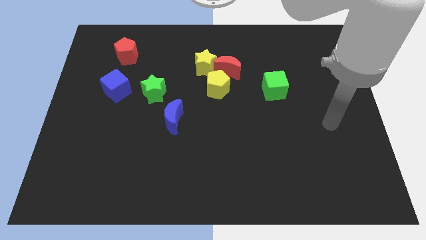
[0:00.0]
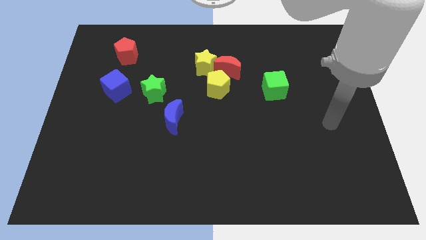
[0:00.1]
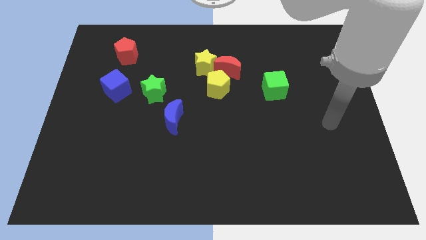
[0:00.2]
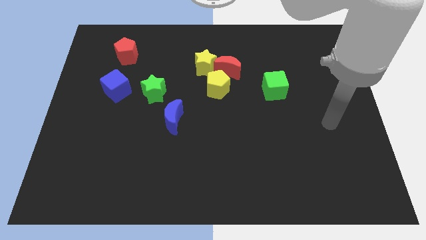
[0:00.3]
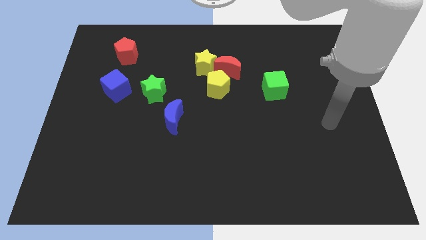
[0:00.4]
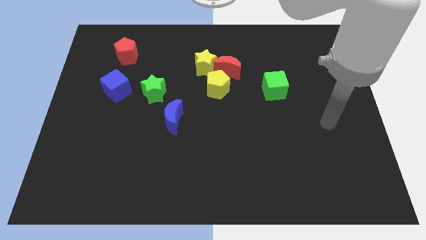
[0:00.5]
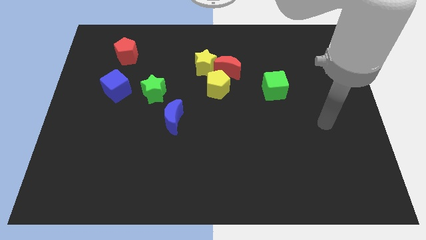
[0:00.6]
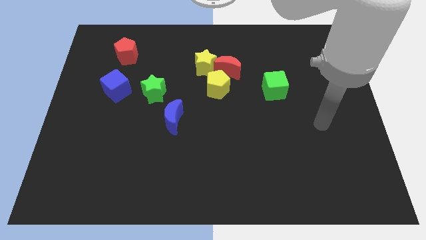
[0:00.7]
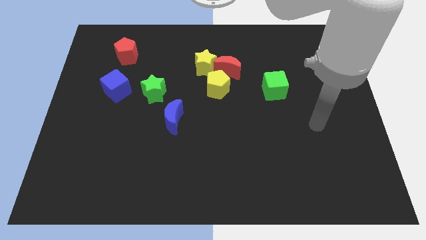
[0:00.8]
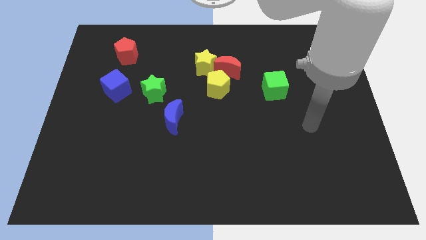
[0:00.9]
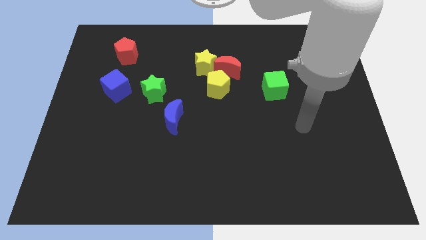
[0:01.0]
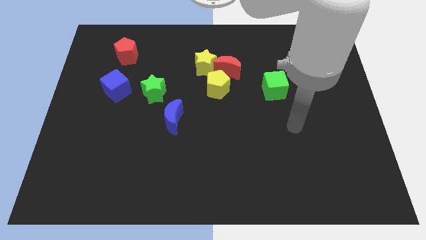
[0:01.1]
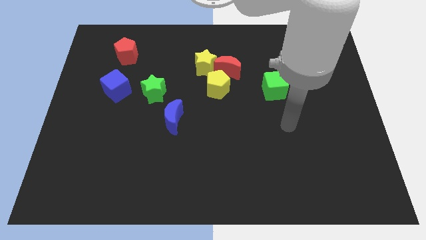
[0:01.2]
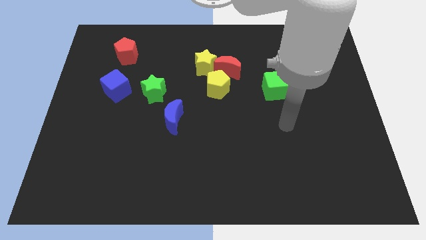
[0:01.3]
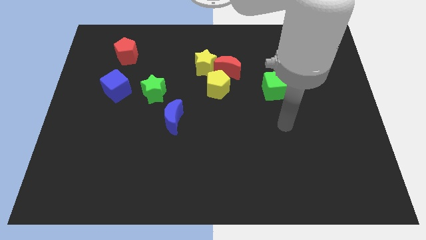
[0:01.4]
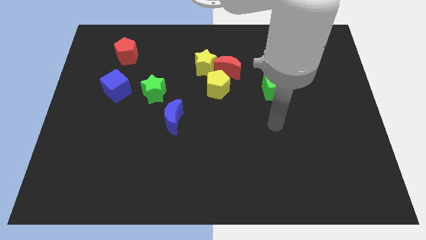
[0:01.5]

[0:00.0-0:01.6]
put your arm at the bottom of the green cube

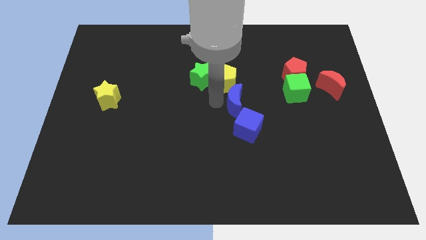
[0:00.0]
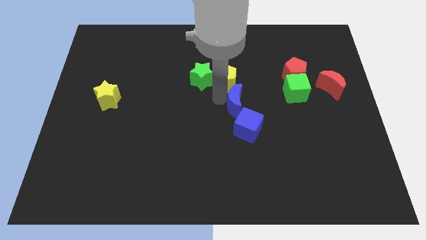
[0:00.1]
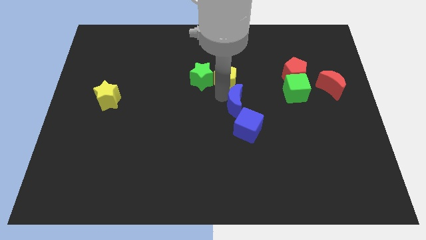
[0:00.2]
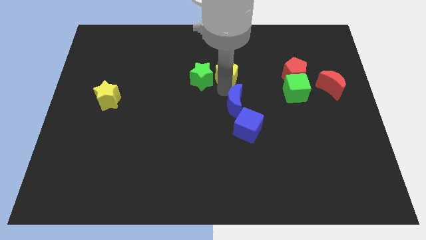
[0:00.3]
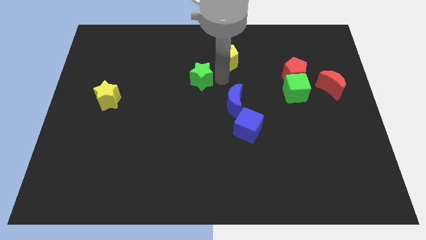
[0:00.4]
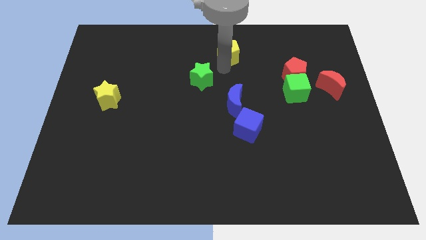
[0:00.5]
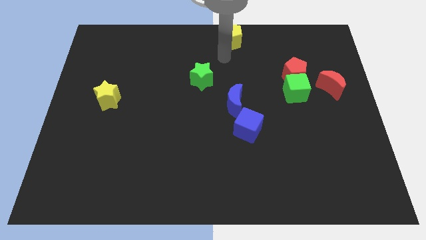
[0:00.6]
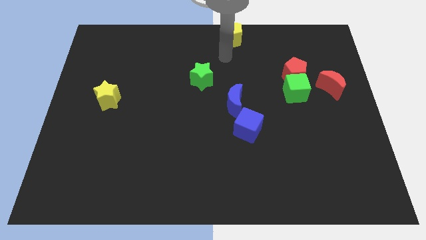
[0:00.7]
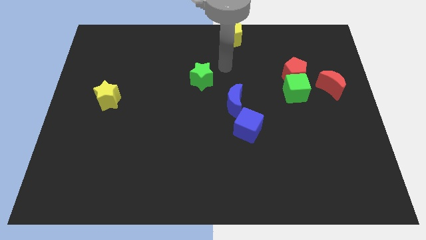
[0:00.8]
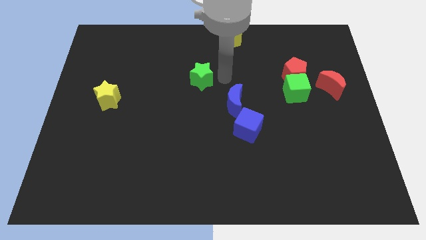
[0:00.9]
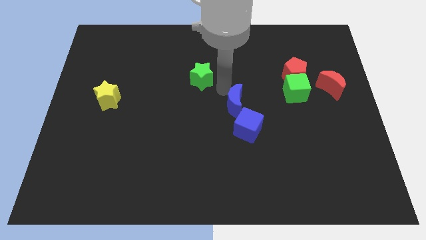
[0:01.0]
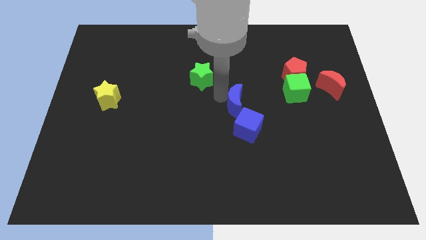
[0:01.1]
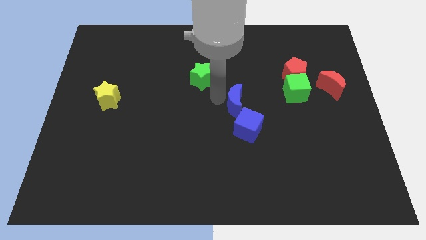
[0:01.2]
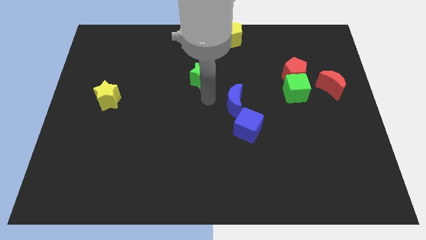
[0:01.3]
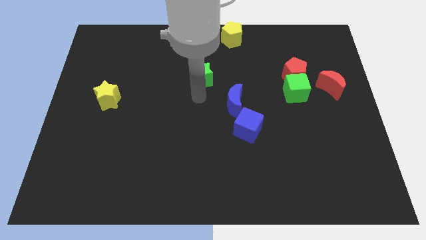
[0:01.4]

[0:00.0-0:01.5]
move the yellow pentagon to the top center

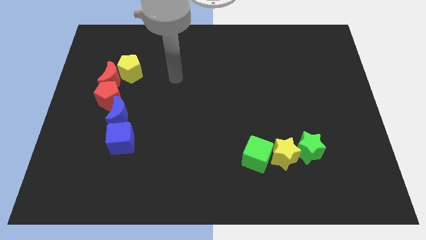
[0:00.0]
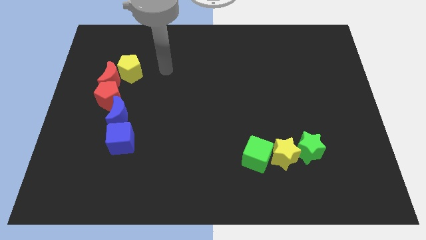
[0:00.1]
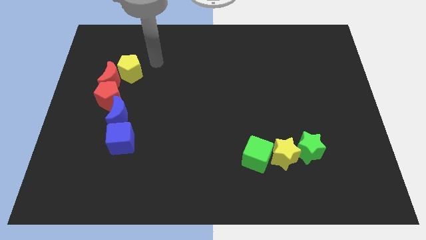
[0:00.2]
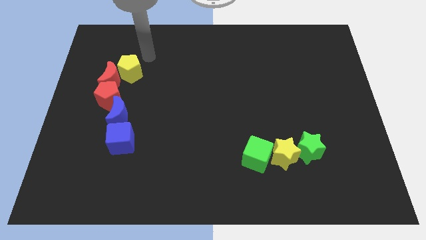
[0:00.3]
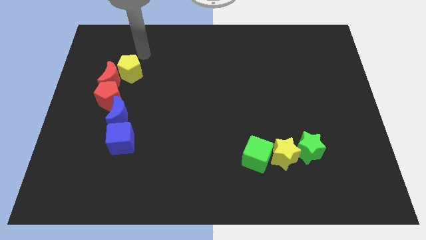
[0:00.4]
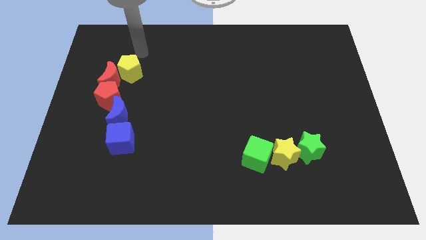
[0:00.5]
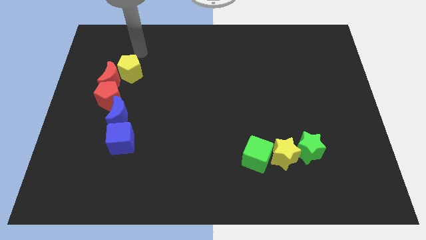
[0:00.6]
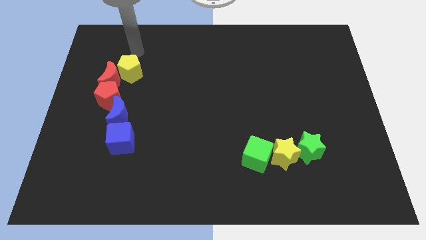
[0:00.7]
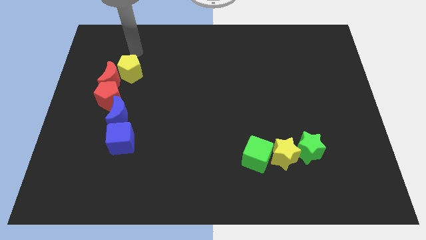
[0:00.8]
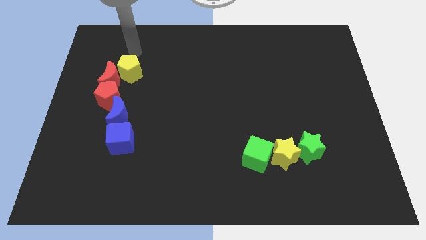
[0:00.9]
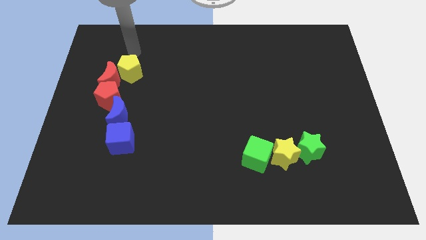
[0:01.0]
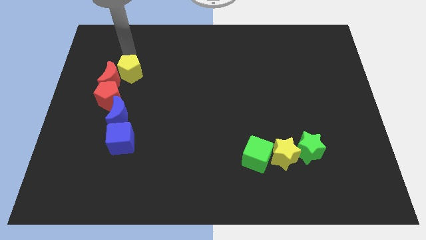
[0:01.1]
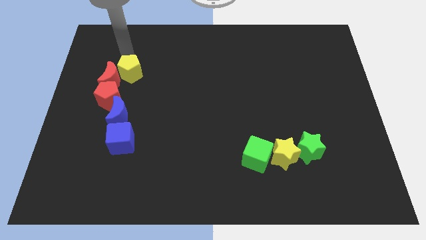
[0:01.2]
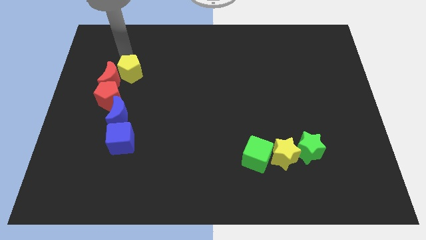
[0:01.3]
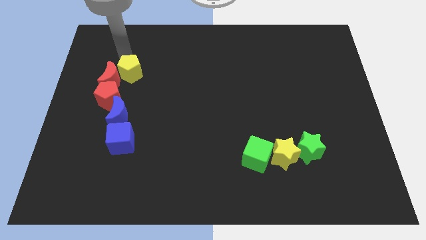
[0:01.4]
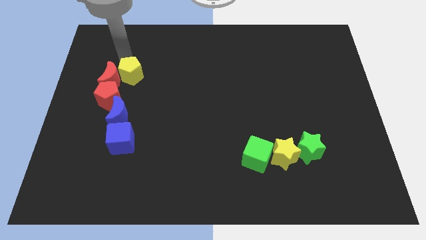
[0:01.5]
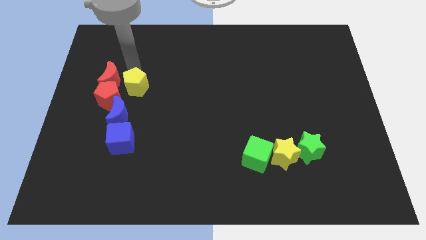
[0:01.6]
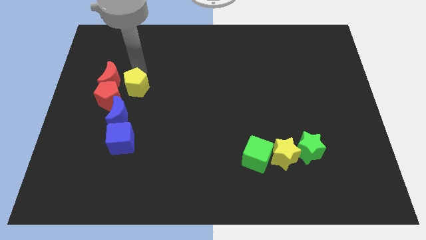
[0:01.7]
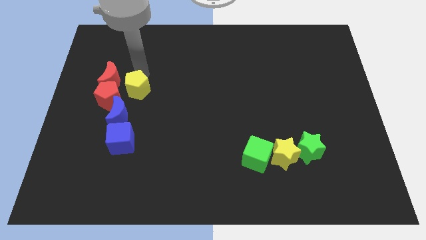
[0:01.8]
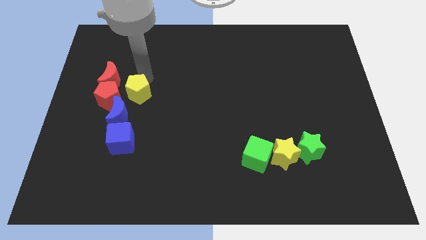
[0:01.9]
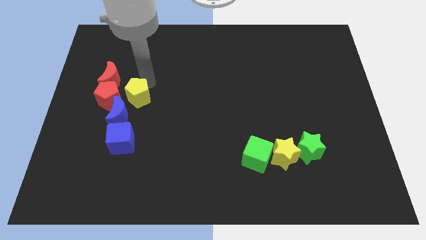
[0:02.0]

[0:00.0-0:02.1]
place the yellow pentagon right to the red pentagon

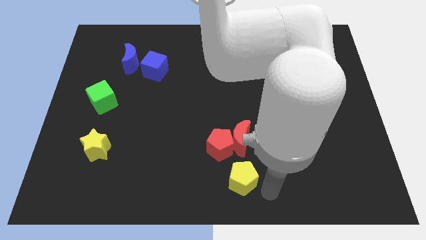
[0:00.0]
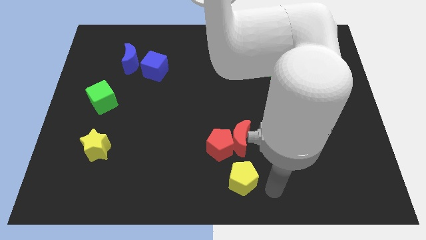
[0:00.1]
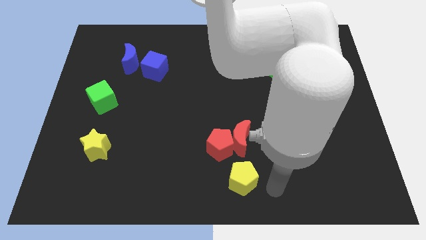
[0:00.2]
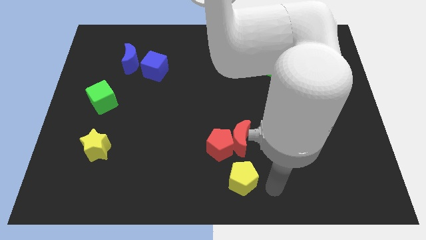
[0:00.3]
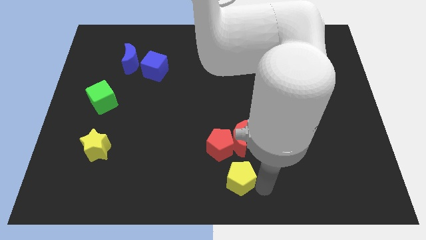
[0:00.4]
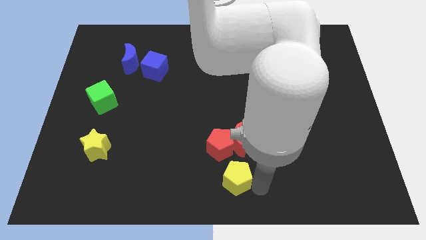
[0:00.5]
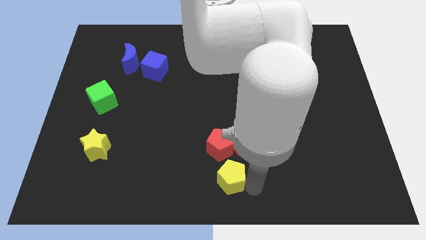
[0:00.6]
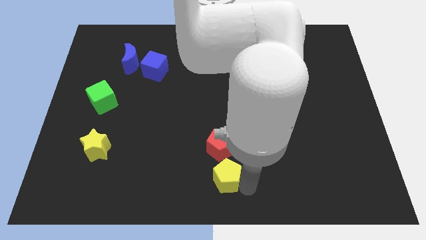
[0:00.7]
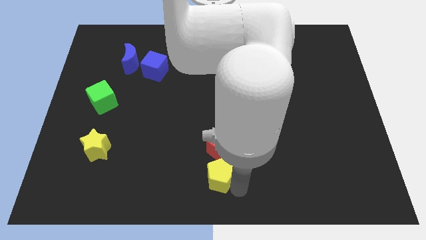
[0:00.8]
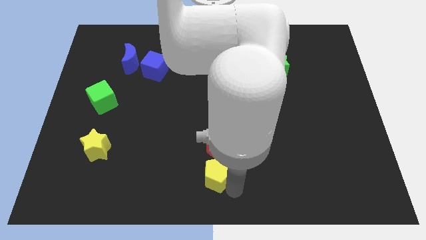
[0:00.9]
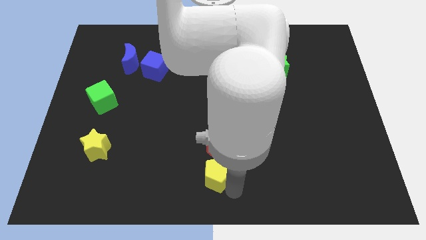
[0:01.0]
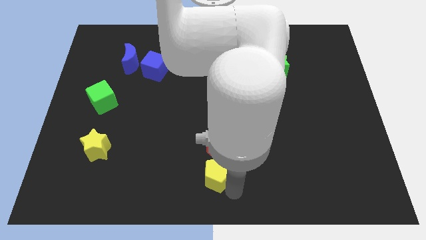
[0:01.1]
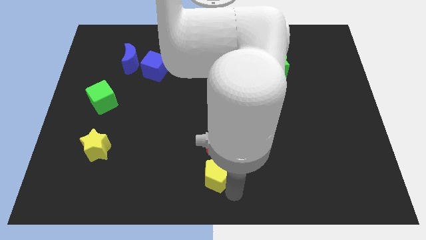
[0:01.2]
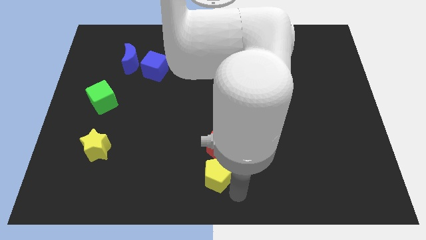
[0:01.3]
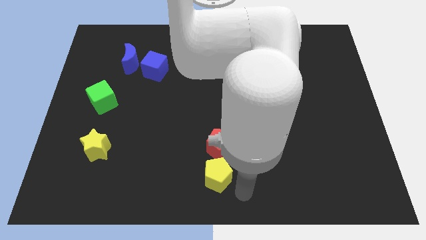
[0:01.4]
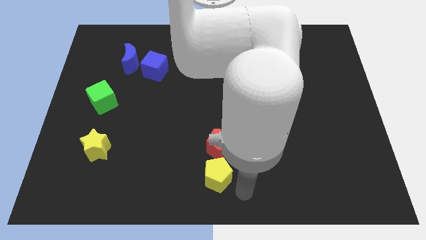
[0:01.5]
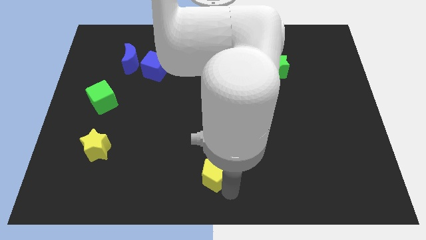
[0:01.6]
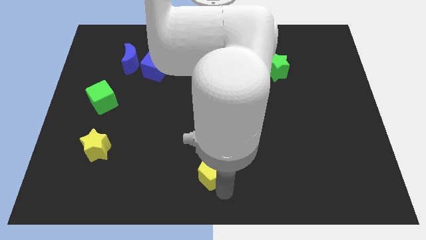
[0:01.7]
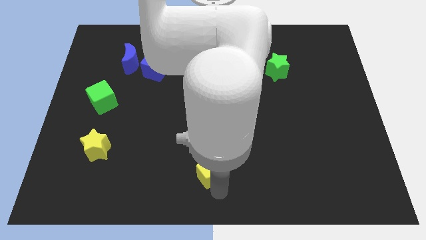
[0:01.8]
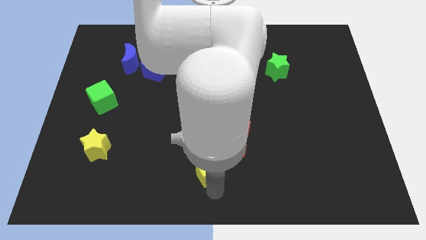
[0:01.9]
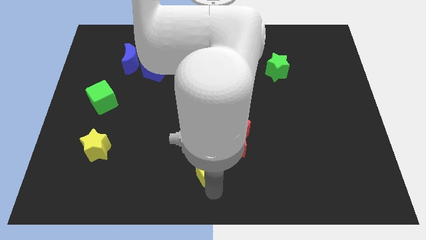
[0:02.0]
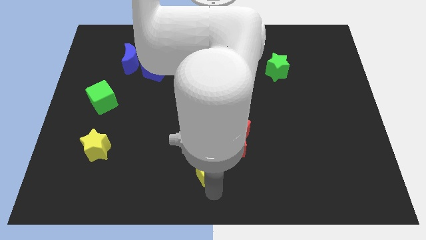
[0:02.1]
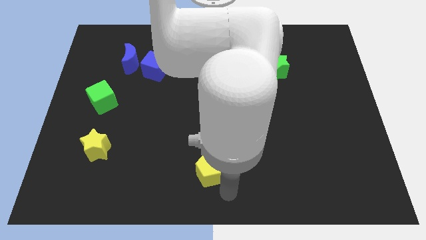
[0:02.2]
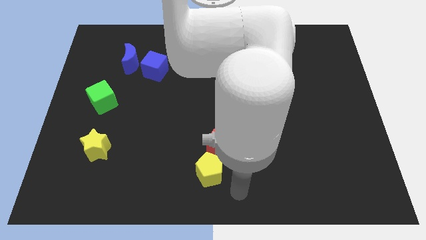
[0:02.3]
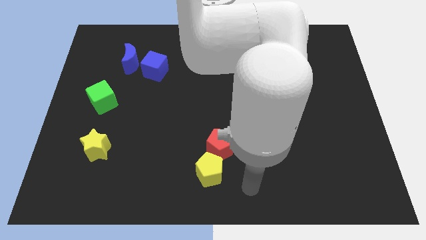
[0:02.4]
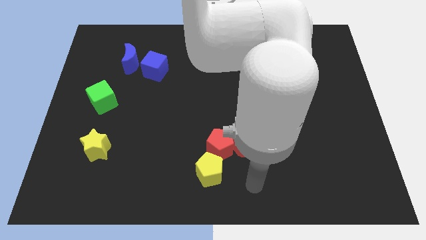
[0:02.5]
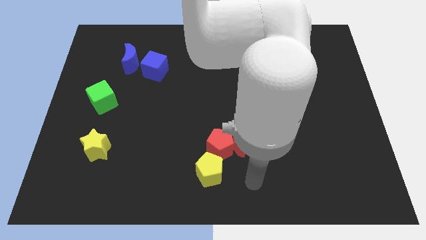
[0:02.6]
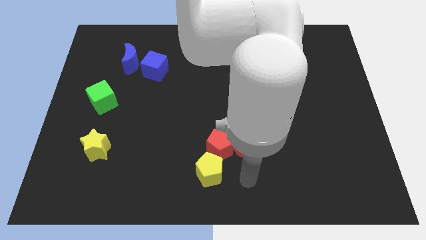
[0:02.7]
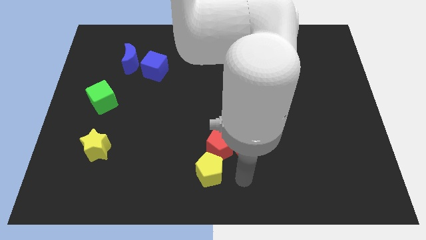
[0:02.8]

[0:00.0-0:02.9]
move the yellow pentagon bottom left of the red pentagon

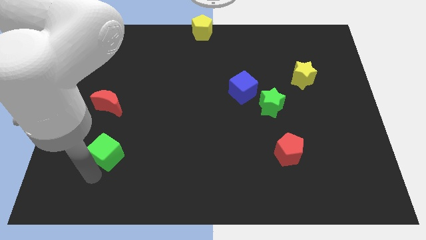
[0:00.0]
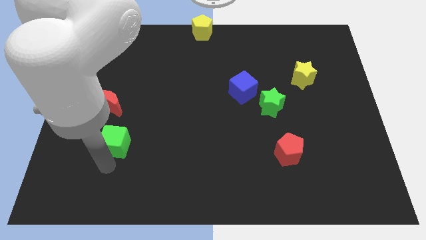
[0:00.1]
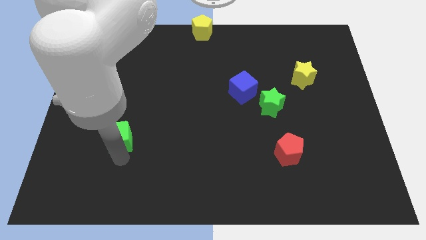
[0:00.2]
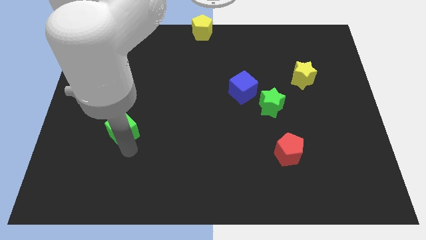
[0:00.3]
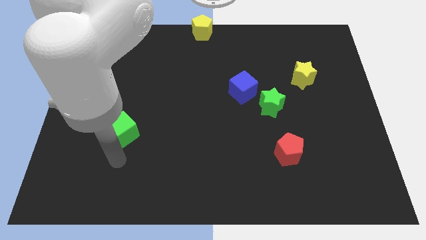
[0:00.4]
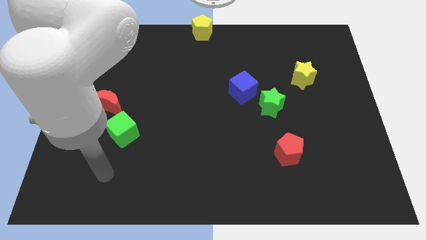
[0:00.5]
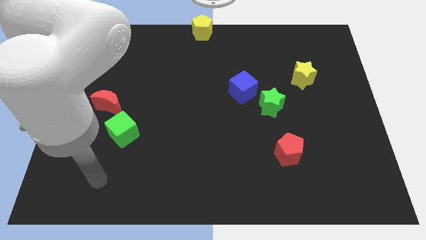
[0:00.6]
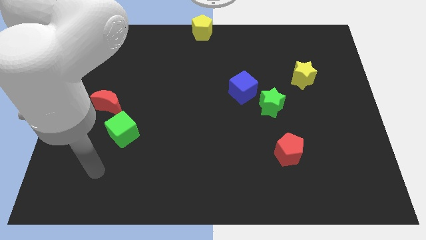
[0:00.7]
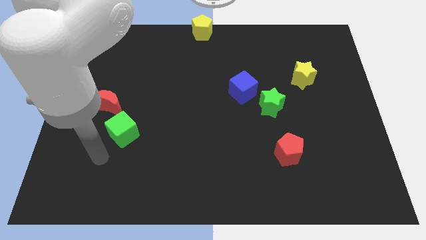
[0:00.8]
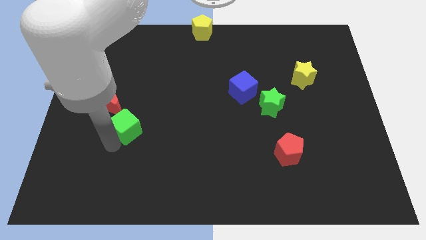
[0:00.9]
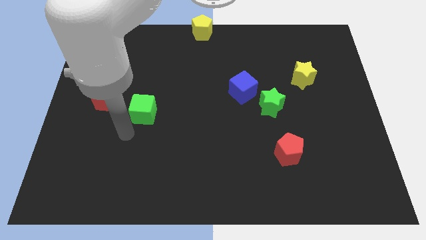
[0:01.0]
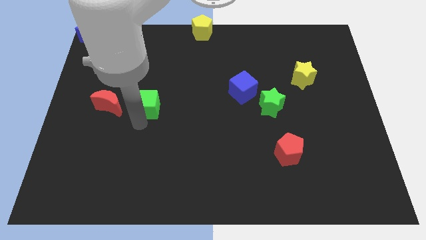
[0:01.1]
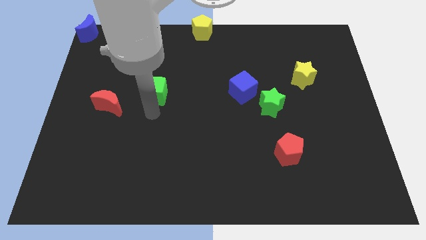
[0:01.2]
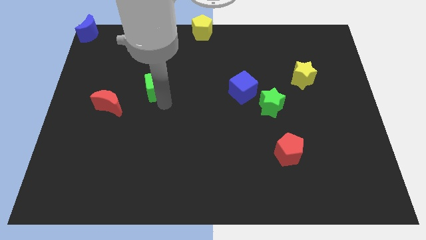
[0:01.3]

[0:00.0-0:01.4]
put the green cube diagonally top right to the red moon
